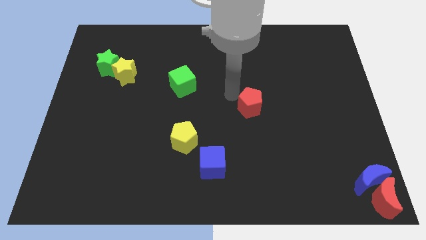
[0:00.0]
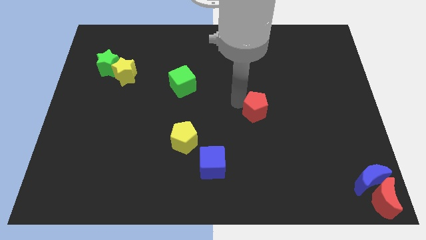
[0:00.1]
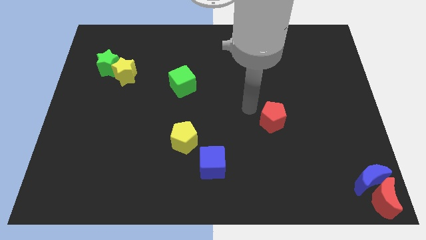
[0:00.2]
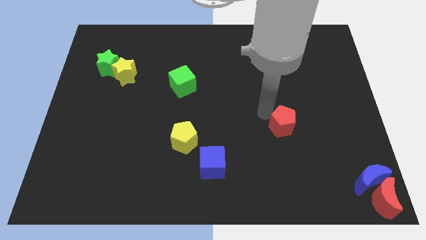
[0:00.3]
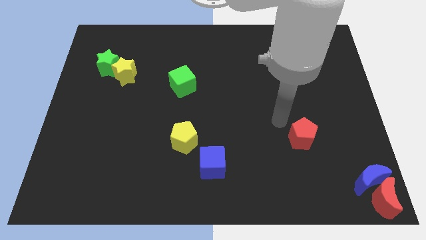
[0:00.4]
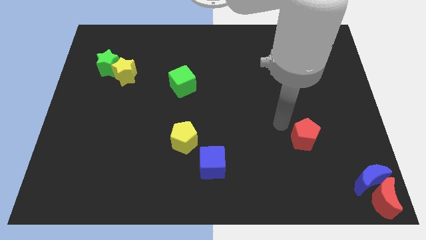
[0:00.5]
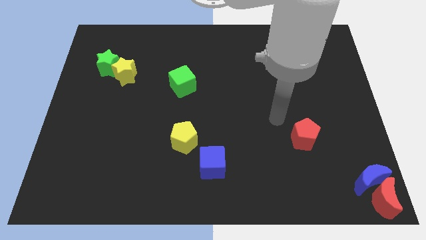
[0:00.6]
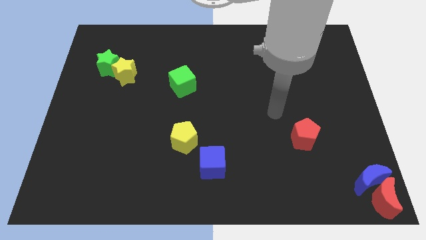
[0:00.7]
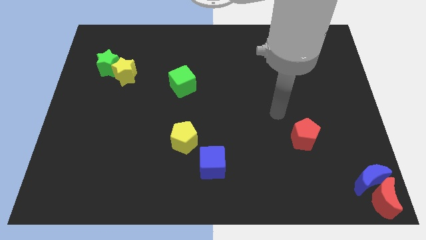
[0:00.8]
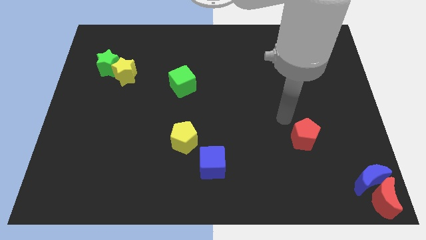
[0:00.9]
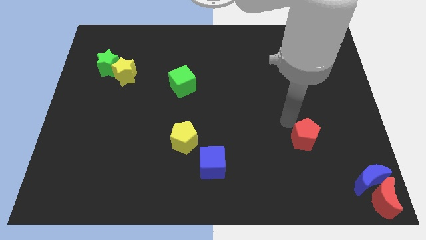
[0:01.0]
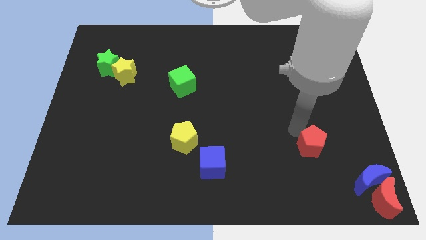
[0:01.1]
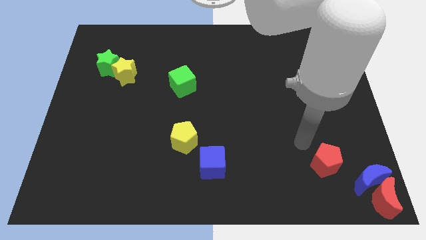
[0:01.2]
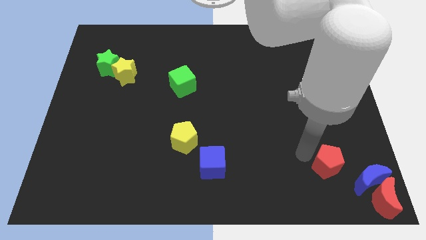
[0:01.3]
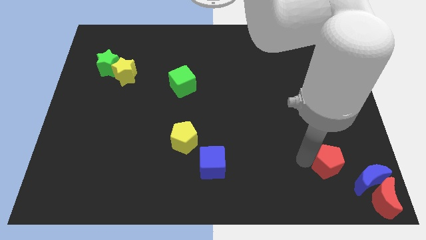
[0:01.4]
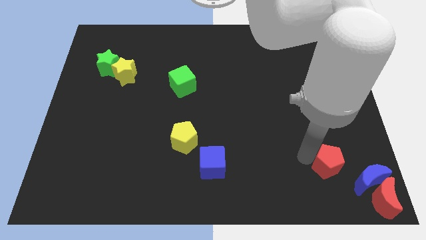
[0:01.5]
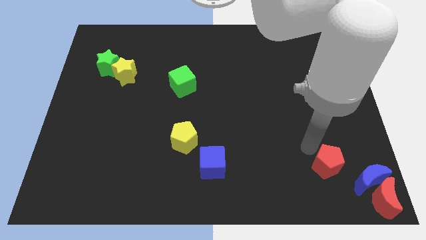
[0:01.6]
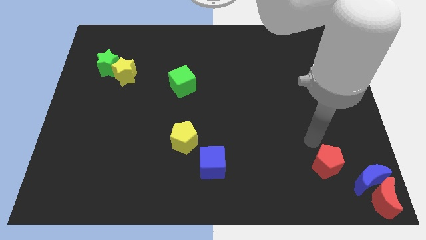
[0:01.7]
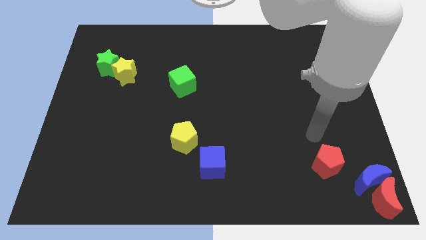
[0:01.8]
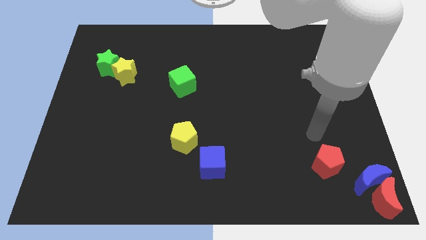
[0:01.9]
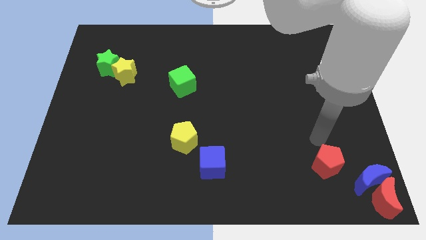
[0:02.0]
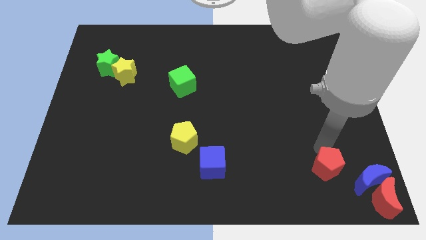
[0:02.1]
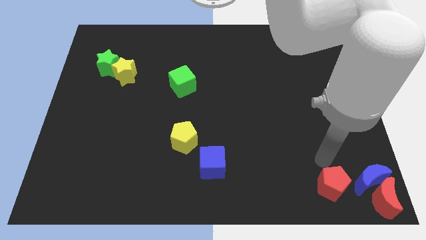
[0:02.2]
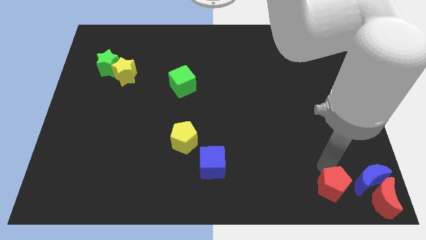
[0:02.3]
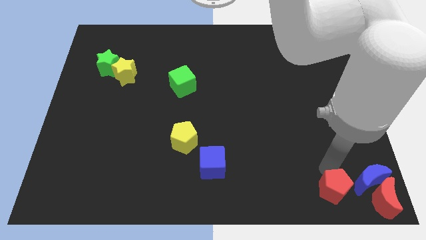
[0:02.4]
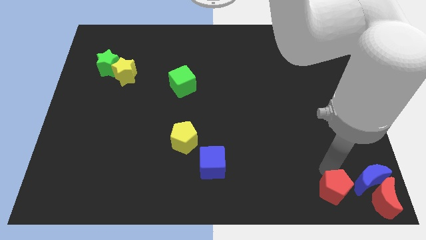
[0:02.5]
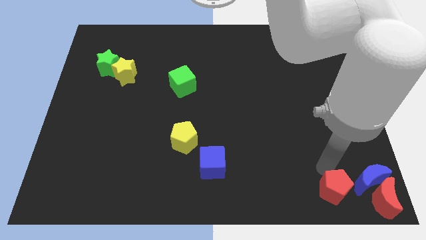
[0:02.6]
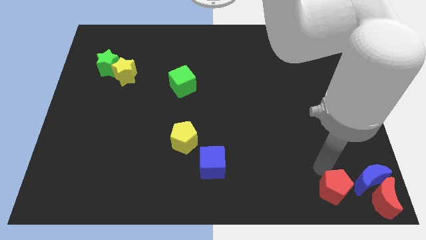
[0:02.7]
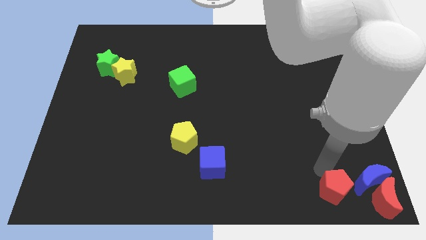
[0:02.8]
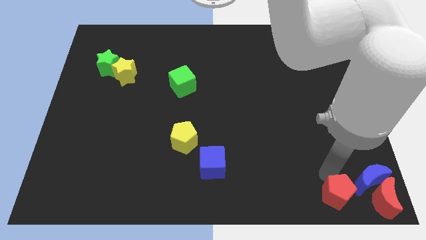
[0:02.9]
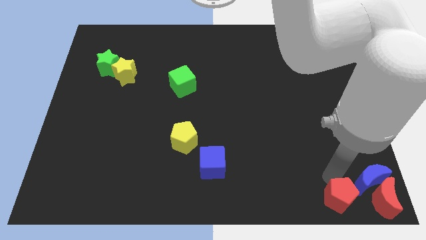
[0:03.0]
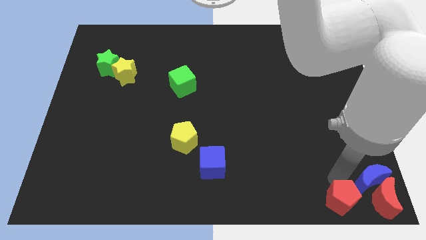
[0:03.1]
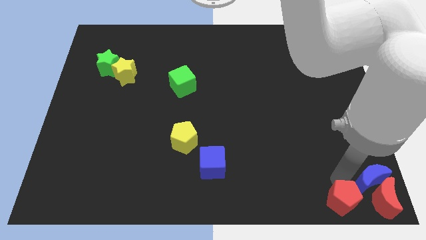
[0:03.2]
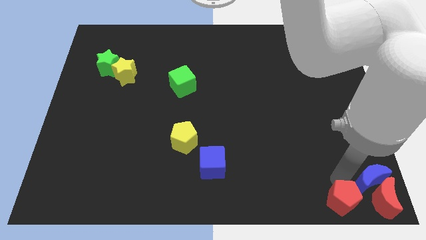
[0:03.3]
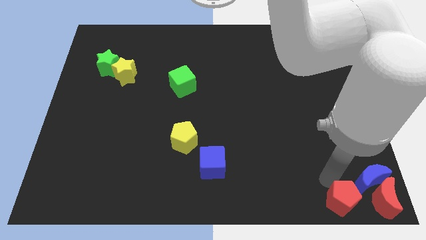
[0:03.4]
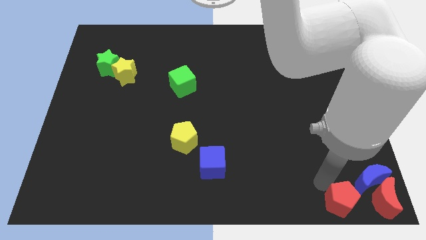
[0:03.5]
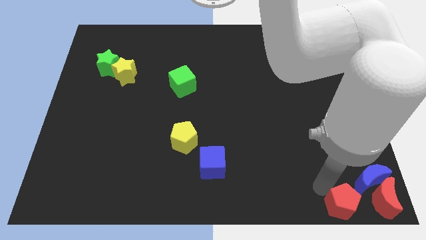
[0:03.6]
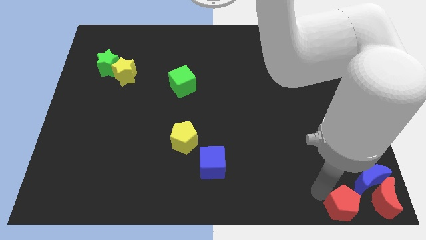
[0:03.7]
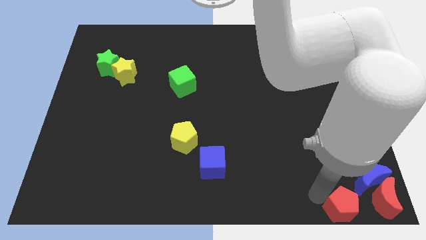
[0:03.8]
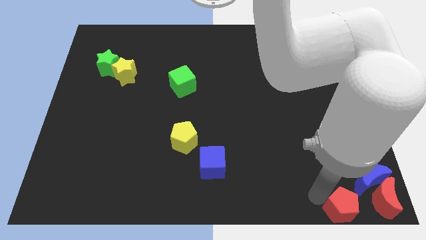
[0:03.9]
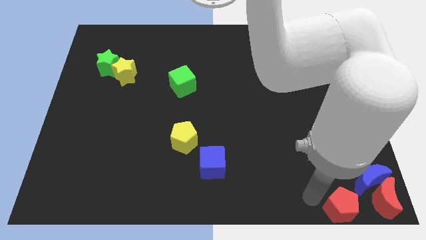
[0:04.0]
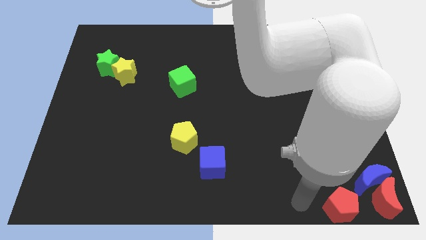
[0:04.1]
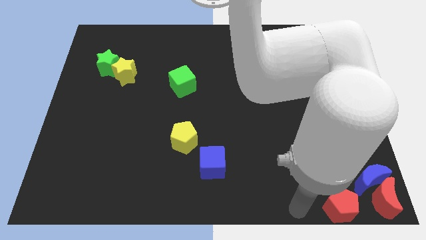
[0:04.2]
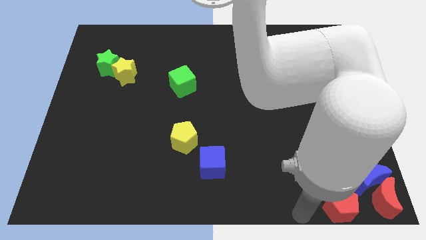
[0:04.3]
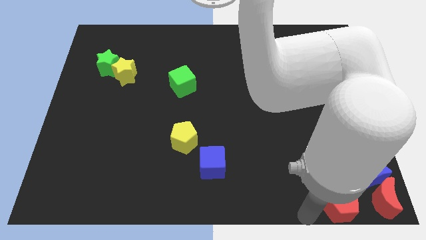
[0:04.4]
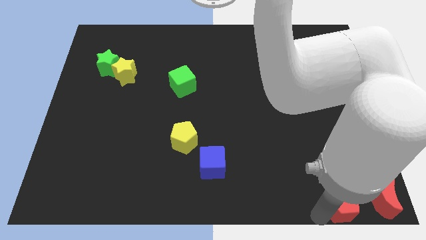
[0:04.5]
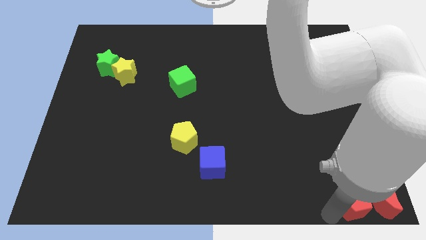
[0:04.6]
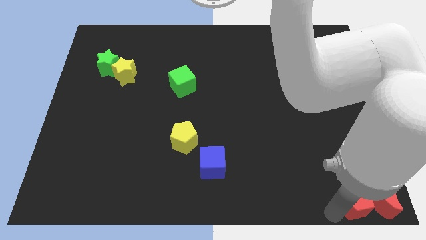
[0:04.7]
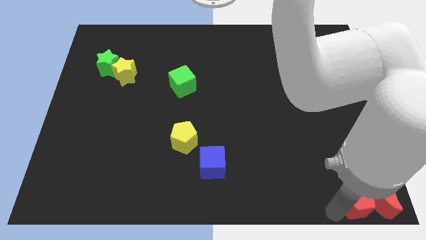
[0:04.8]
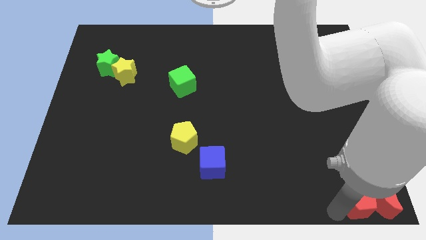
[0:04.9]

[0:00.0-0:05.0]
place the red pentagon to the left side of red crescent

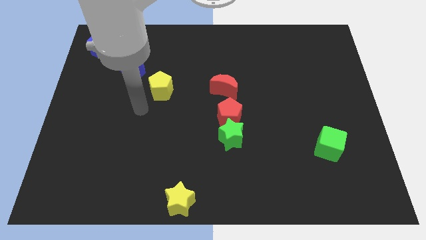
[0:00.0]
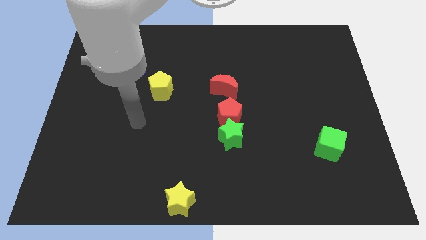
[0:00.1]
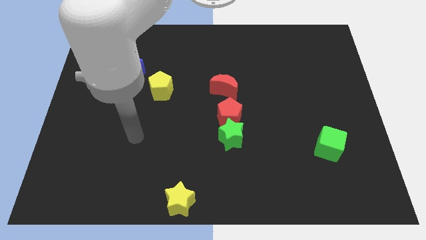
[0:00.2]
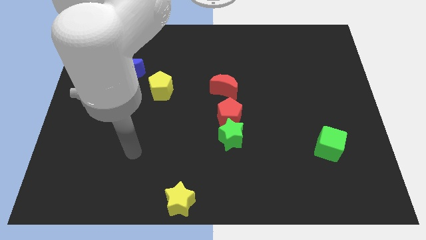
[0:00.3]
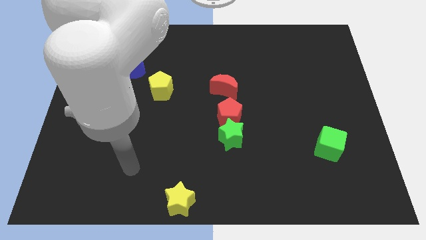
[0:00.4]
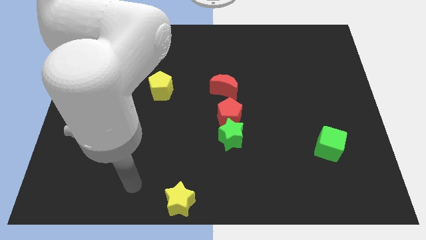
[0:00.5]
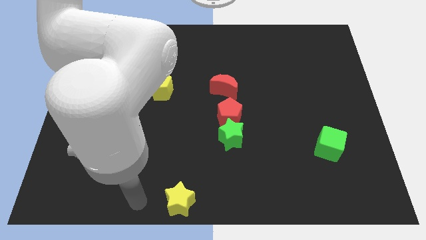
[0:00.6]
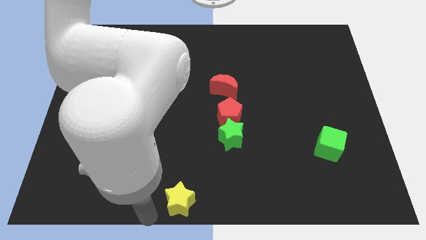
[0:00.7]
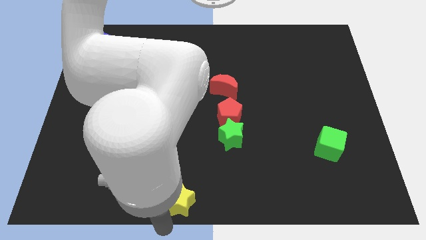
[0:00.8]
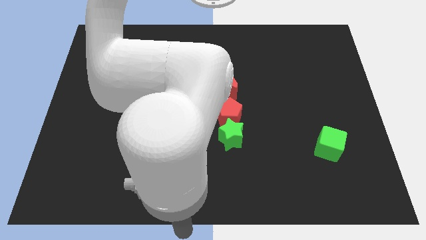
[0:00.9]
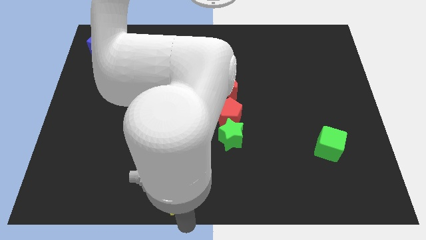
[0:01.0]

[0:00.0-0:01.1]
move your arm from the yellow pentagon

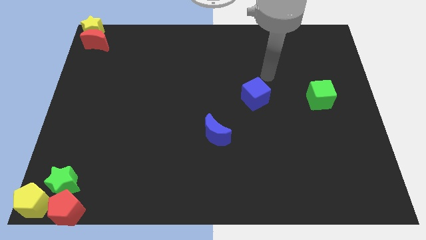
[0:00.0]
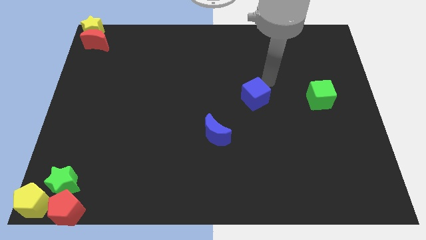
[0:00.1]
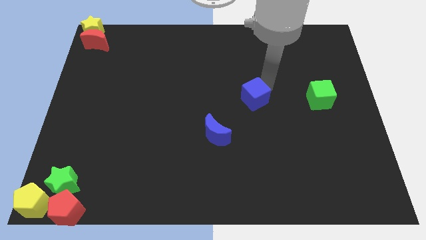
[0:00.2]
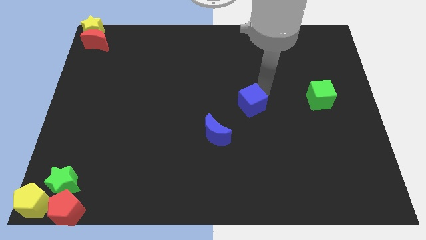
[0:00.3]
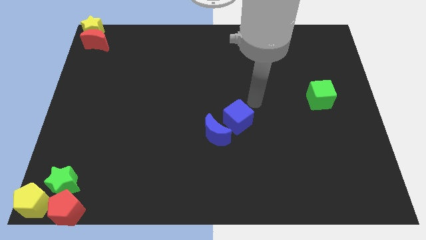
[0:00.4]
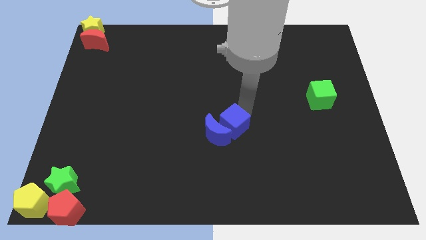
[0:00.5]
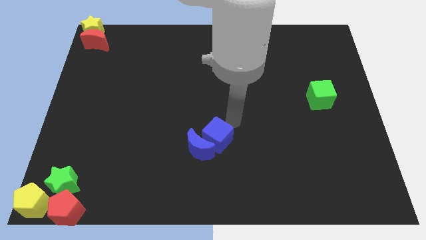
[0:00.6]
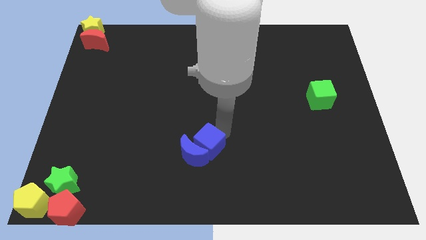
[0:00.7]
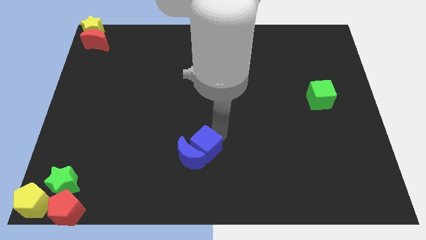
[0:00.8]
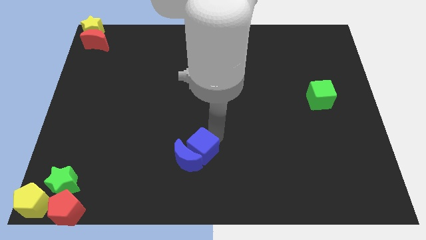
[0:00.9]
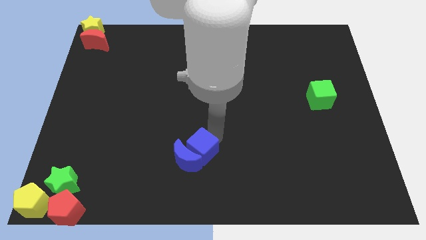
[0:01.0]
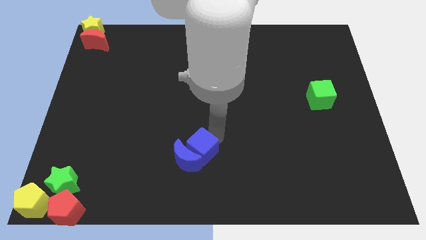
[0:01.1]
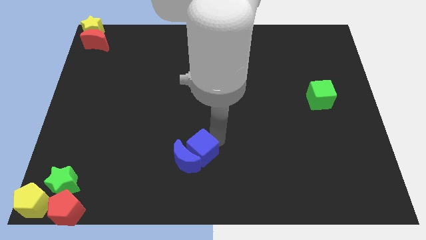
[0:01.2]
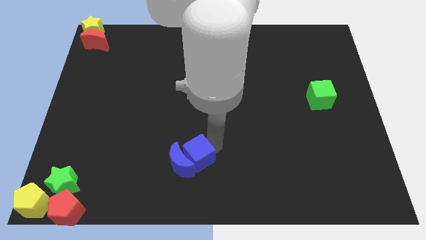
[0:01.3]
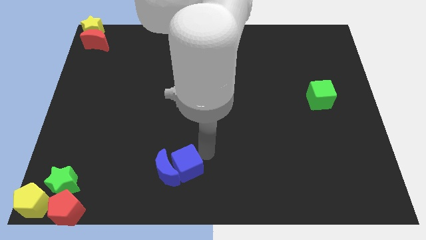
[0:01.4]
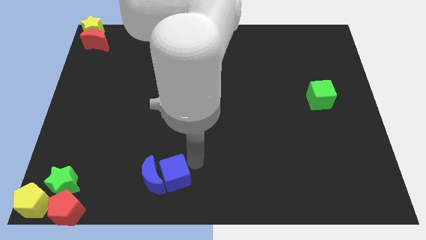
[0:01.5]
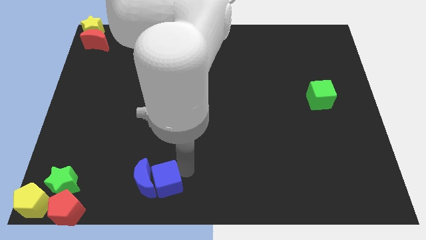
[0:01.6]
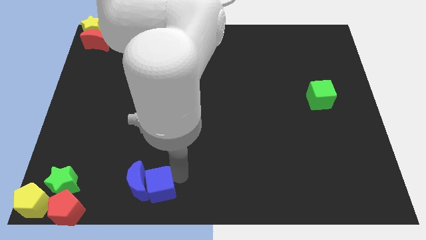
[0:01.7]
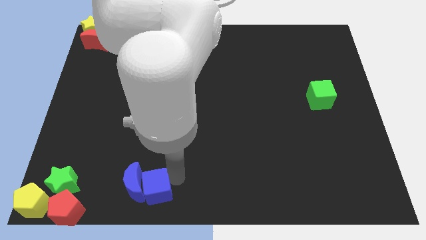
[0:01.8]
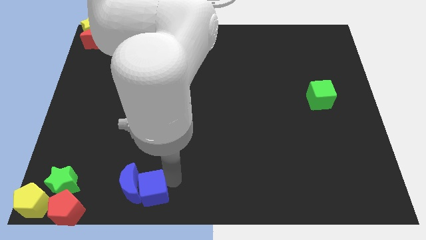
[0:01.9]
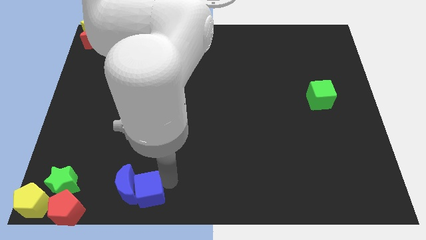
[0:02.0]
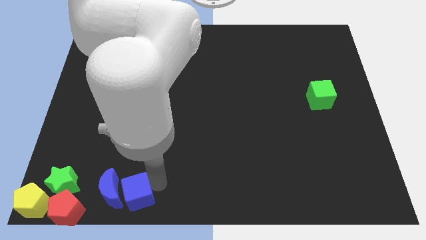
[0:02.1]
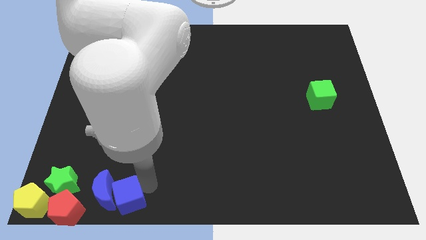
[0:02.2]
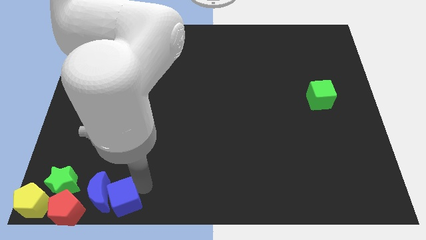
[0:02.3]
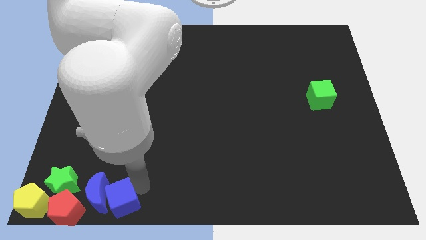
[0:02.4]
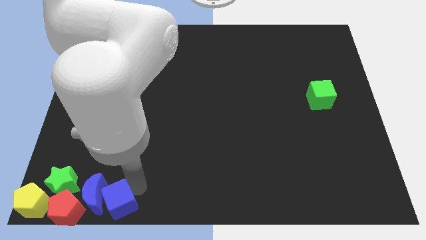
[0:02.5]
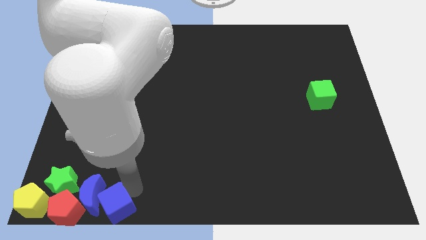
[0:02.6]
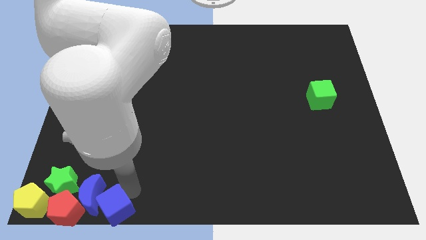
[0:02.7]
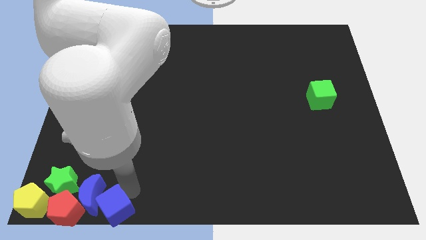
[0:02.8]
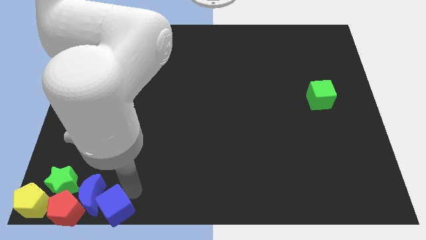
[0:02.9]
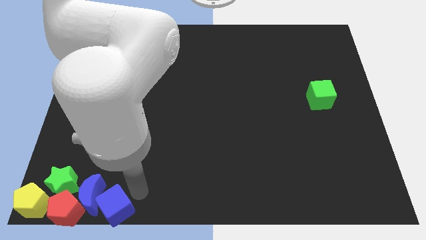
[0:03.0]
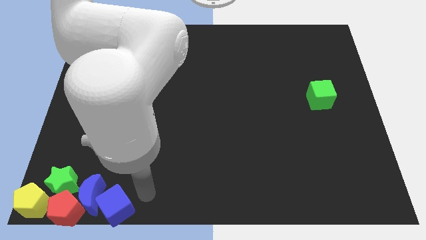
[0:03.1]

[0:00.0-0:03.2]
push the blue blocks into the group of blocks
